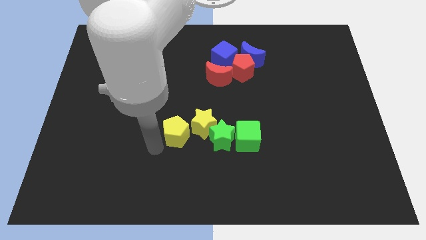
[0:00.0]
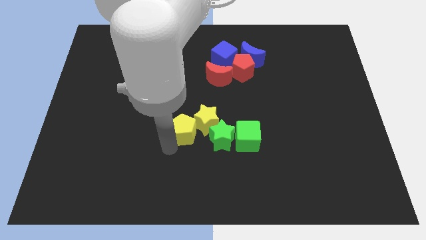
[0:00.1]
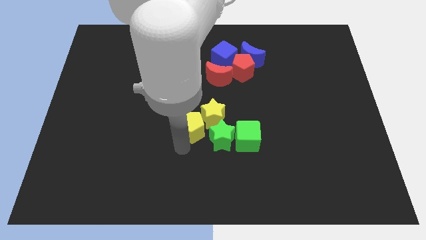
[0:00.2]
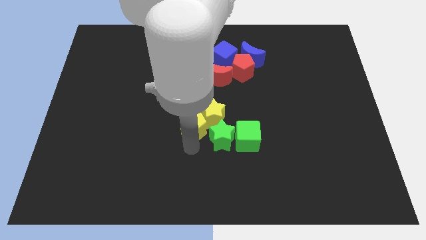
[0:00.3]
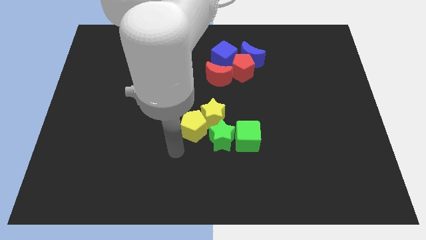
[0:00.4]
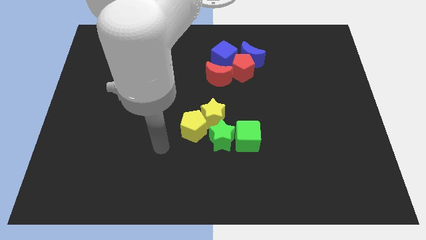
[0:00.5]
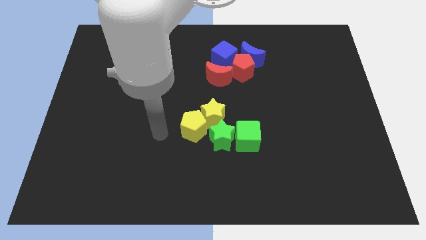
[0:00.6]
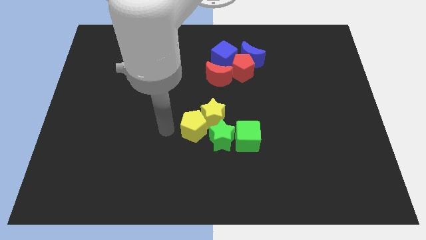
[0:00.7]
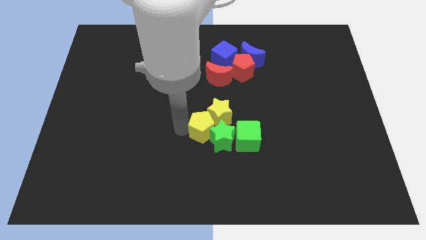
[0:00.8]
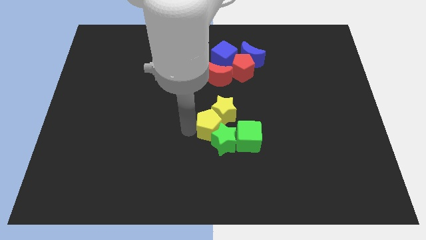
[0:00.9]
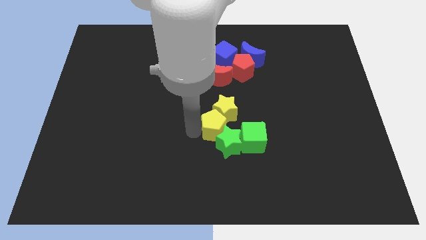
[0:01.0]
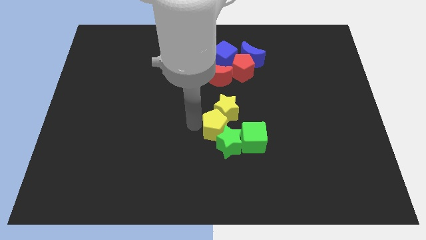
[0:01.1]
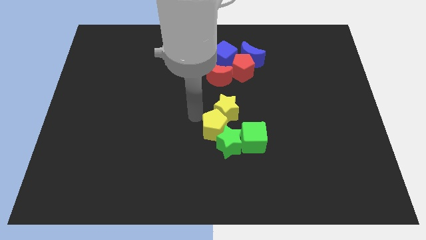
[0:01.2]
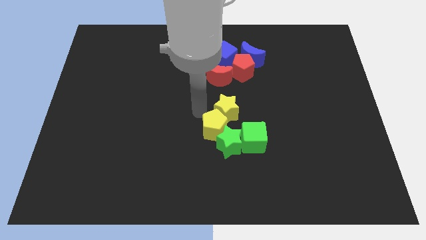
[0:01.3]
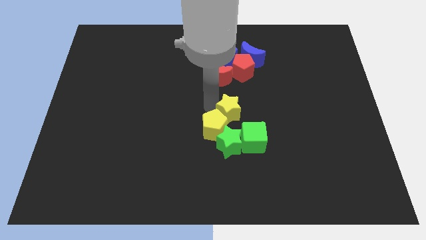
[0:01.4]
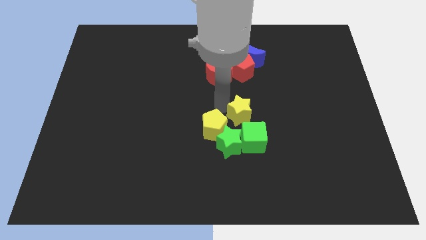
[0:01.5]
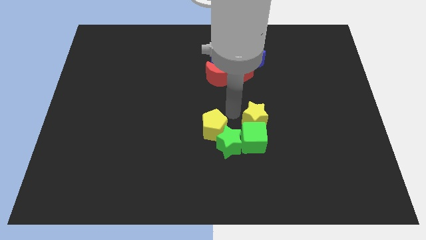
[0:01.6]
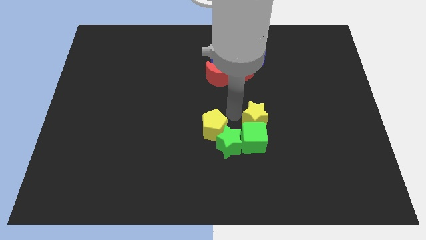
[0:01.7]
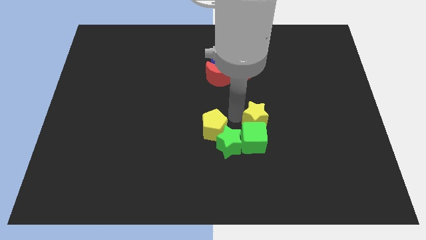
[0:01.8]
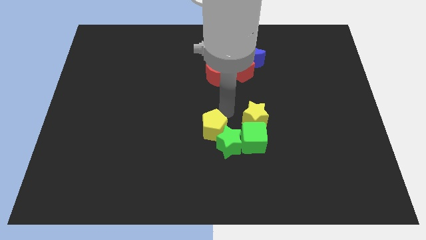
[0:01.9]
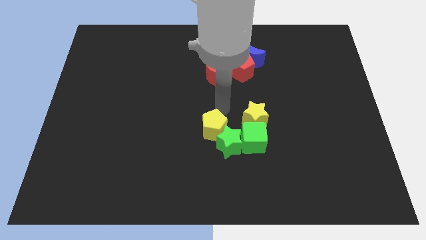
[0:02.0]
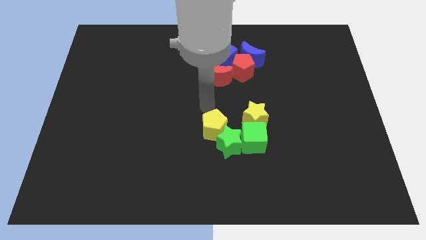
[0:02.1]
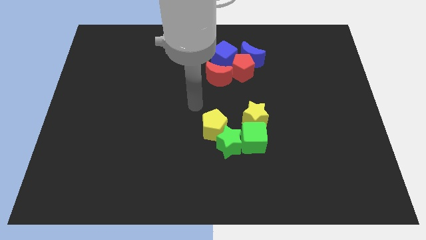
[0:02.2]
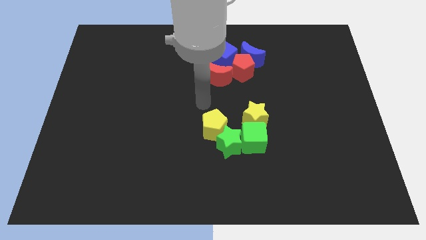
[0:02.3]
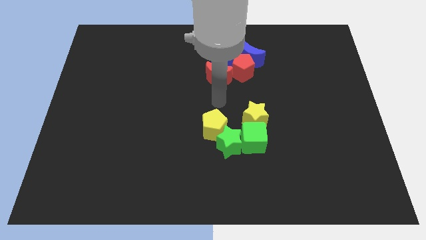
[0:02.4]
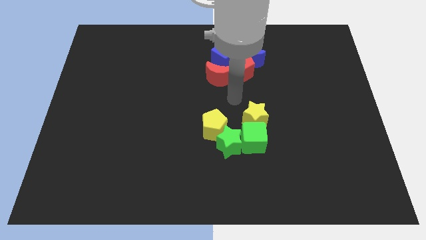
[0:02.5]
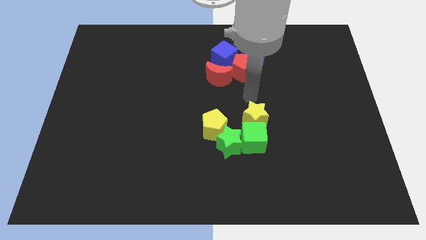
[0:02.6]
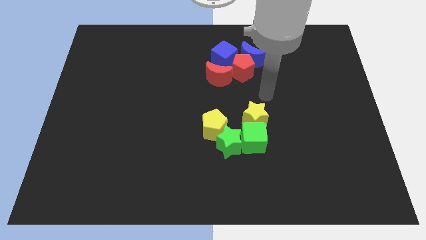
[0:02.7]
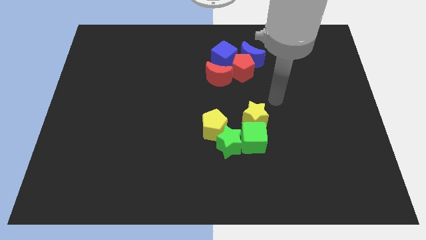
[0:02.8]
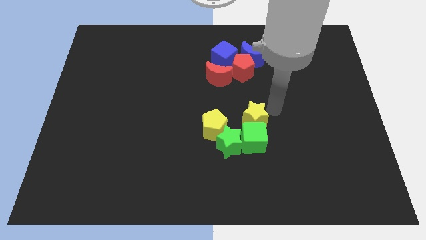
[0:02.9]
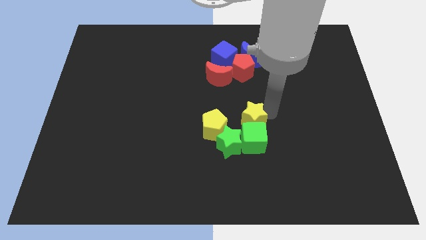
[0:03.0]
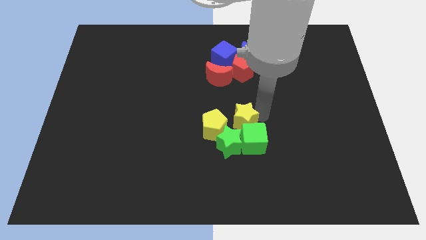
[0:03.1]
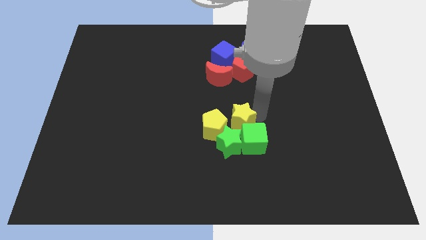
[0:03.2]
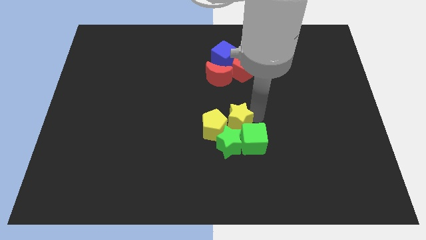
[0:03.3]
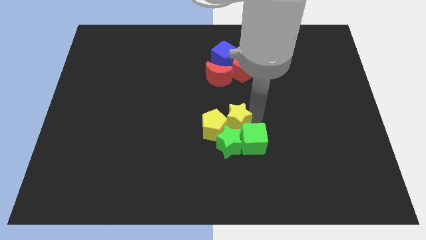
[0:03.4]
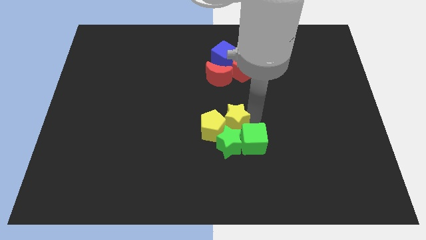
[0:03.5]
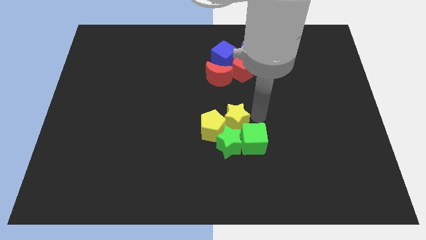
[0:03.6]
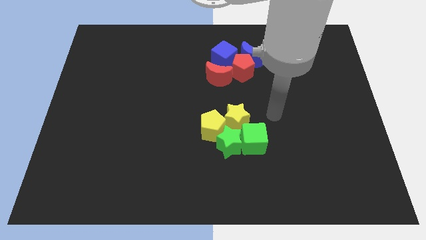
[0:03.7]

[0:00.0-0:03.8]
arrange the group of blocks below the group of objects

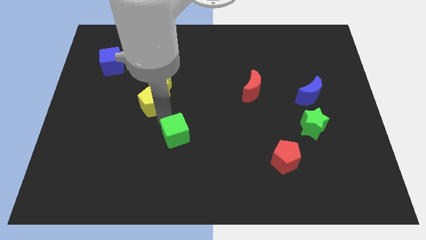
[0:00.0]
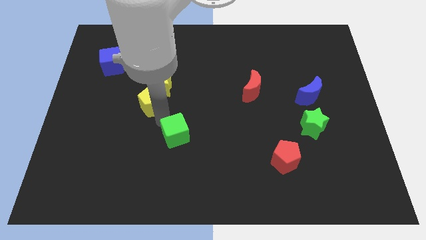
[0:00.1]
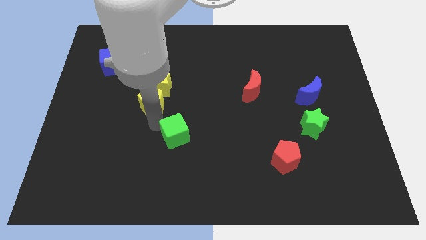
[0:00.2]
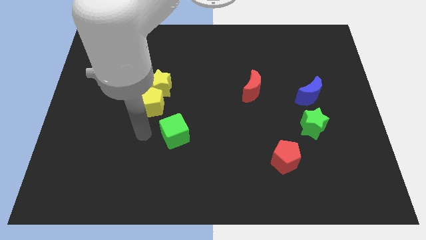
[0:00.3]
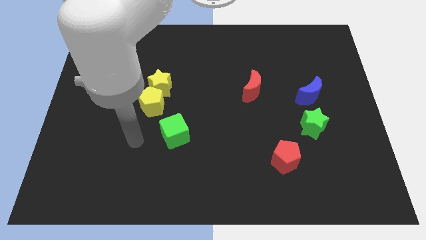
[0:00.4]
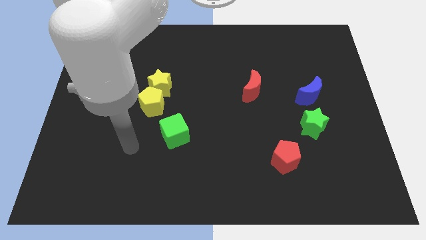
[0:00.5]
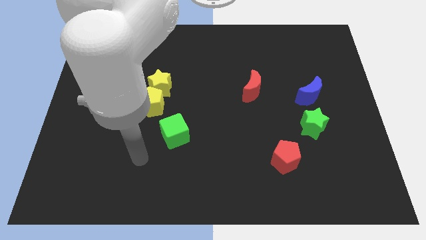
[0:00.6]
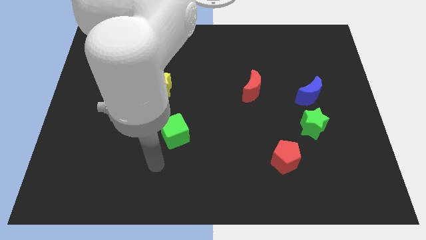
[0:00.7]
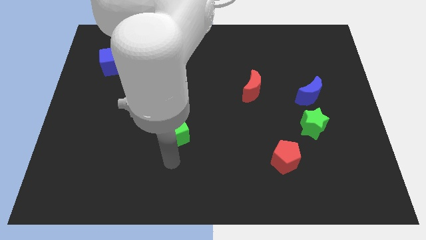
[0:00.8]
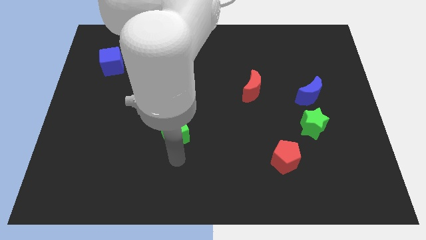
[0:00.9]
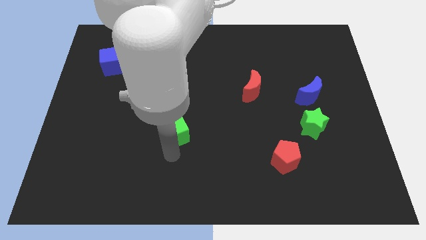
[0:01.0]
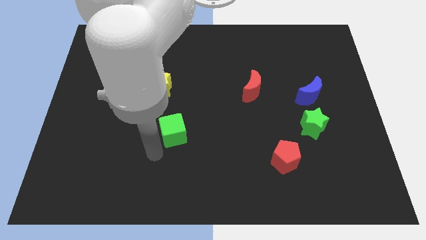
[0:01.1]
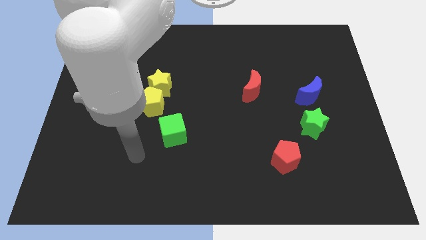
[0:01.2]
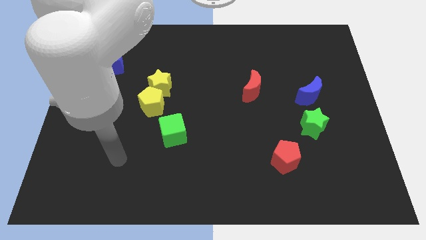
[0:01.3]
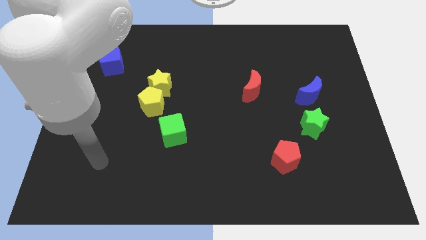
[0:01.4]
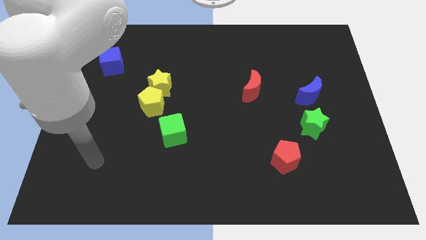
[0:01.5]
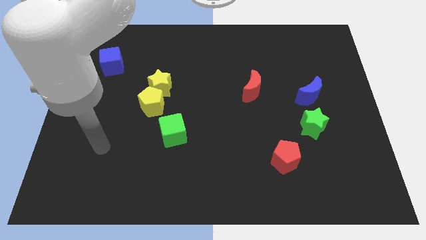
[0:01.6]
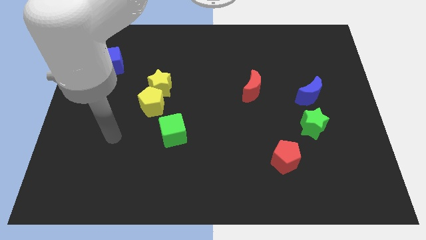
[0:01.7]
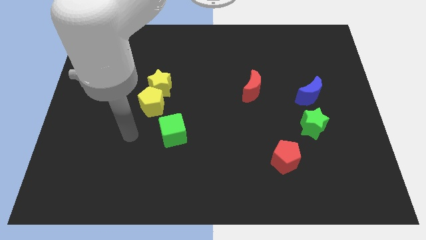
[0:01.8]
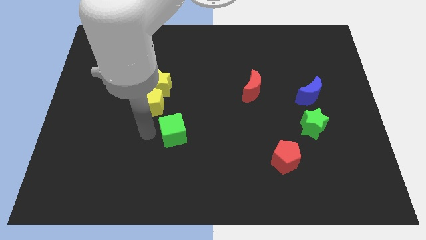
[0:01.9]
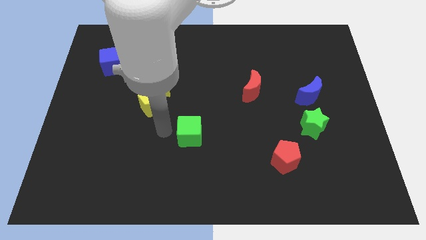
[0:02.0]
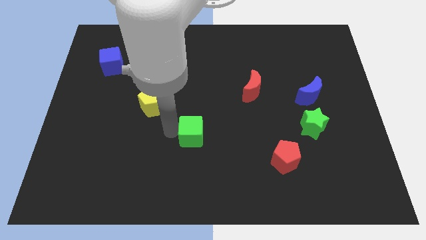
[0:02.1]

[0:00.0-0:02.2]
move the green cube slightly towards right

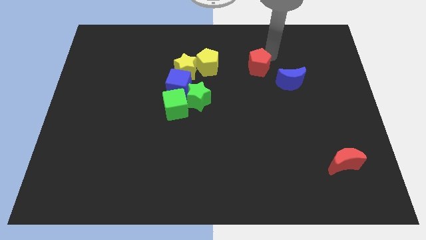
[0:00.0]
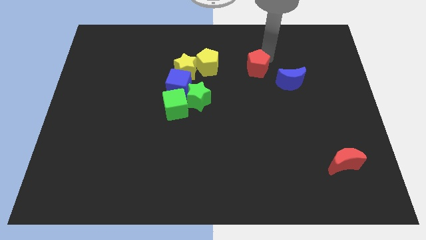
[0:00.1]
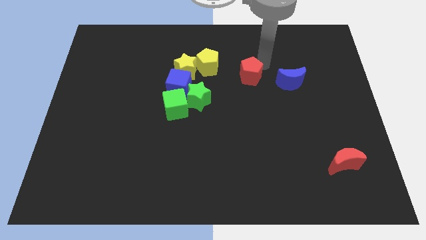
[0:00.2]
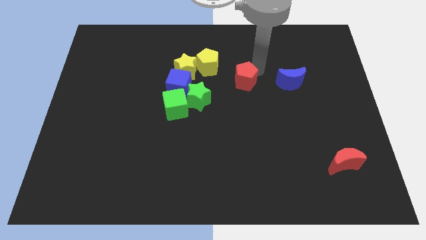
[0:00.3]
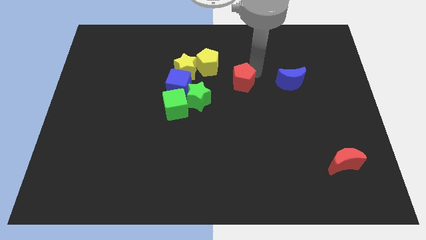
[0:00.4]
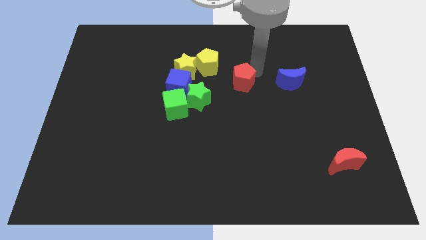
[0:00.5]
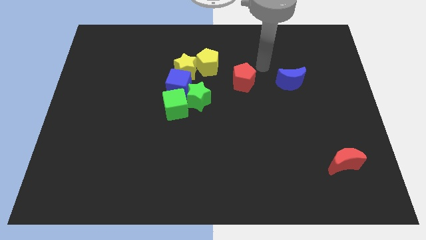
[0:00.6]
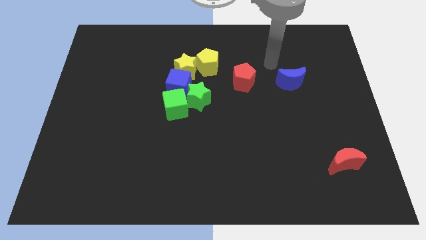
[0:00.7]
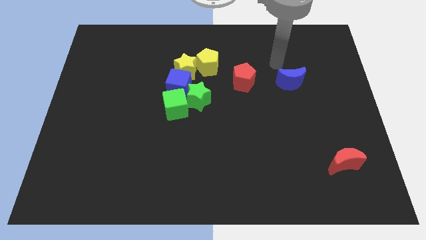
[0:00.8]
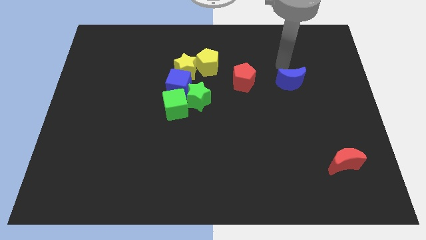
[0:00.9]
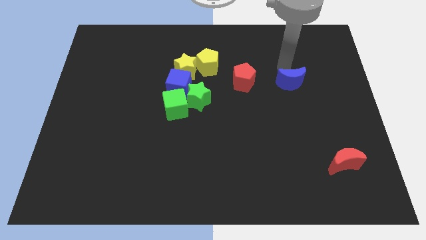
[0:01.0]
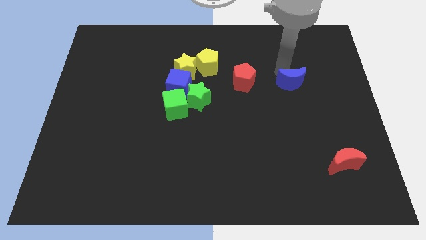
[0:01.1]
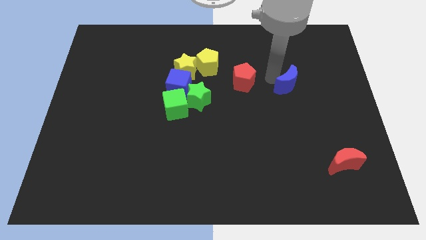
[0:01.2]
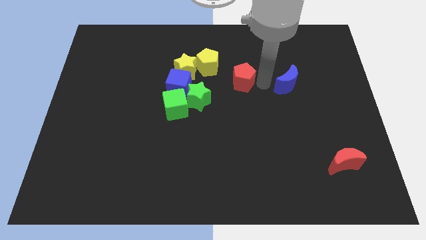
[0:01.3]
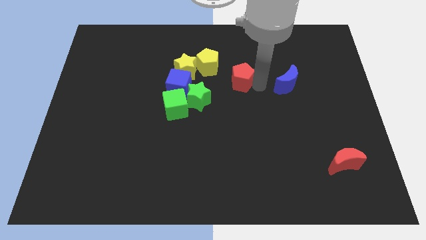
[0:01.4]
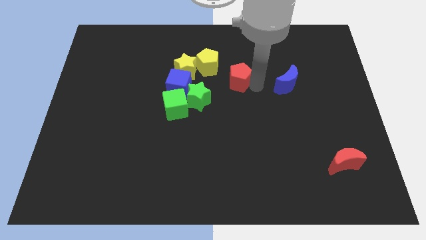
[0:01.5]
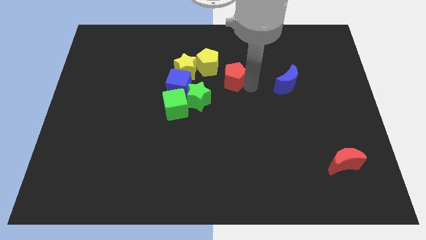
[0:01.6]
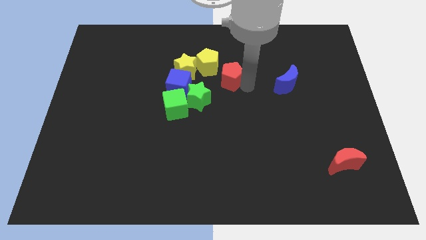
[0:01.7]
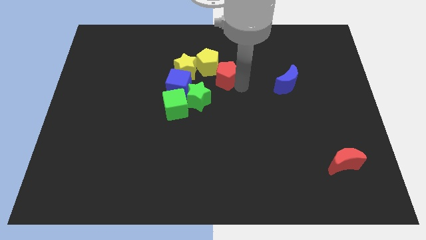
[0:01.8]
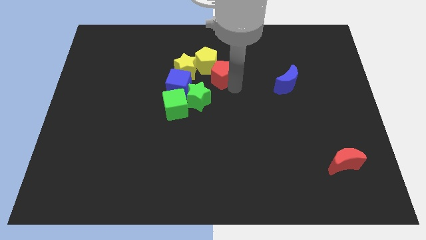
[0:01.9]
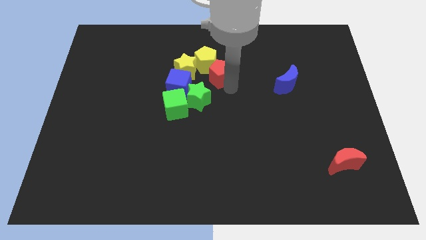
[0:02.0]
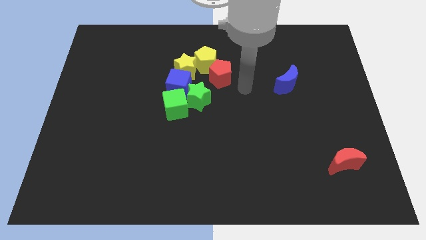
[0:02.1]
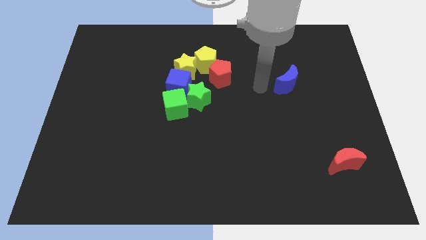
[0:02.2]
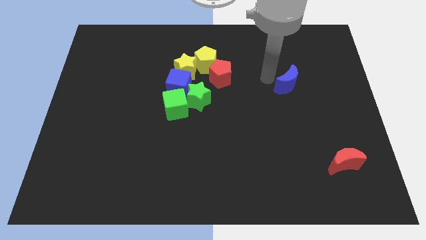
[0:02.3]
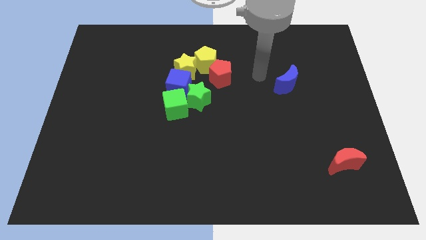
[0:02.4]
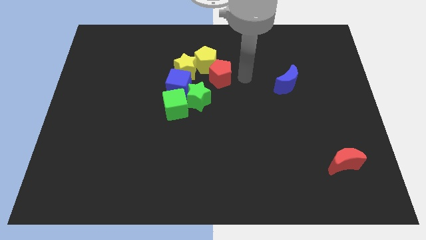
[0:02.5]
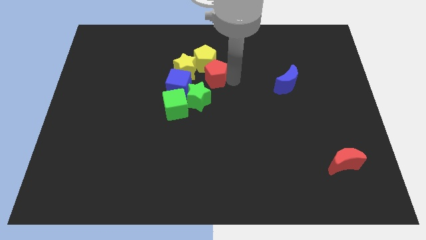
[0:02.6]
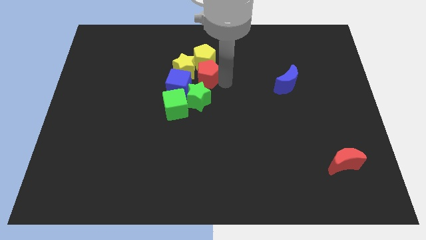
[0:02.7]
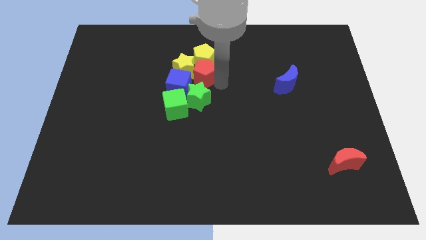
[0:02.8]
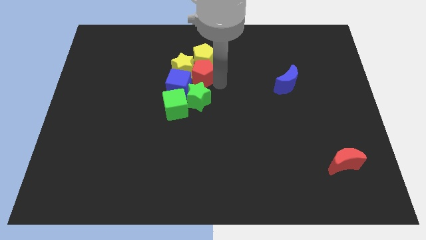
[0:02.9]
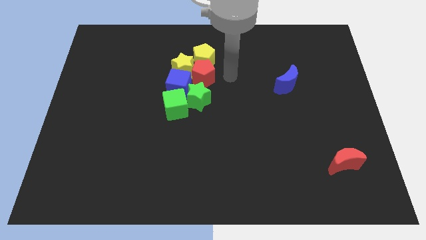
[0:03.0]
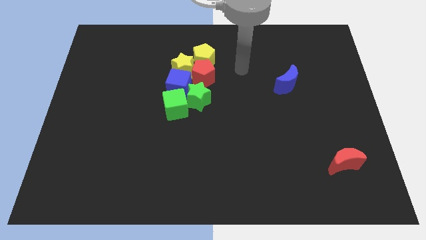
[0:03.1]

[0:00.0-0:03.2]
put the red pentagon to the bottom side of the yellow pentagon
